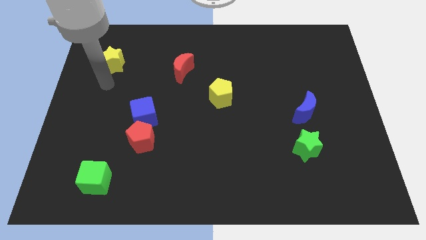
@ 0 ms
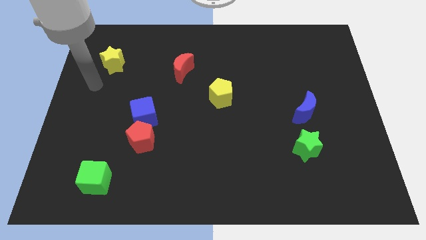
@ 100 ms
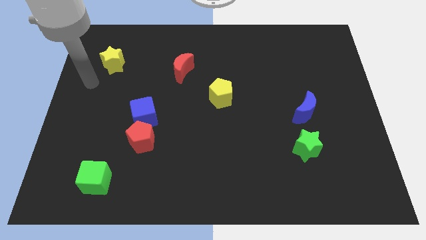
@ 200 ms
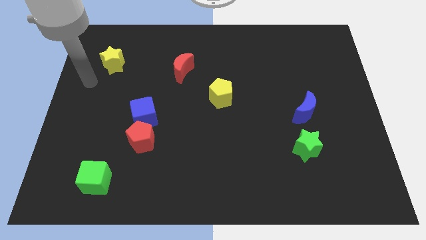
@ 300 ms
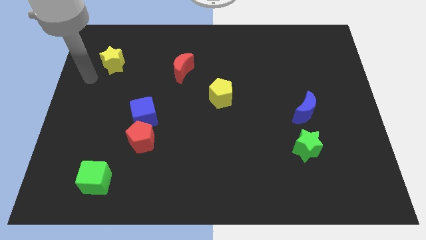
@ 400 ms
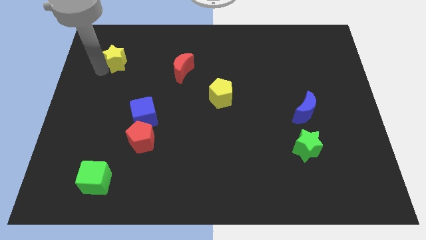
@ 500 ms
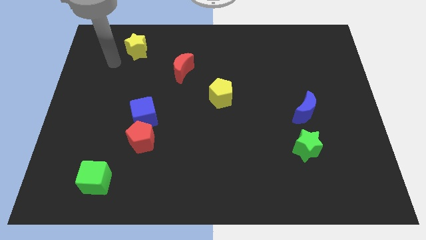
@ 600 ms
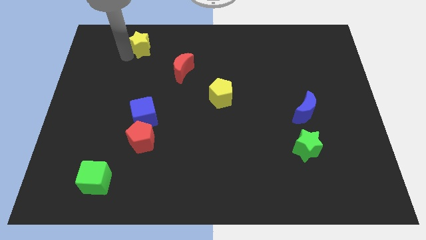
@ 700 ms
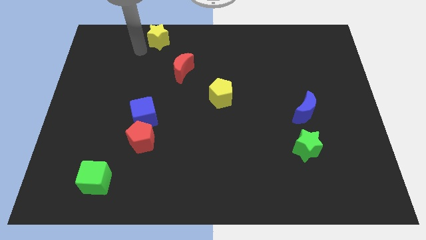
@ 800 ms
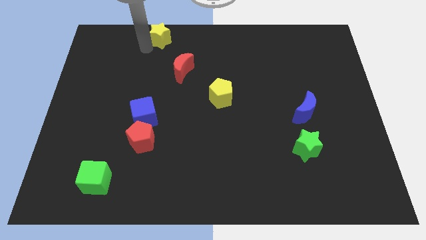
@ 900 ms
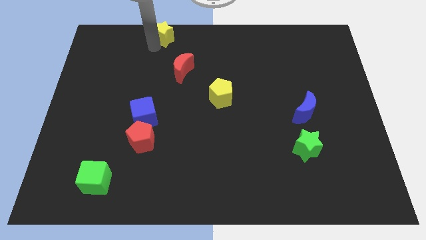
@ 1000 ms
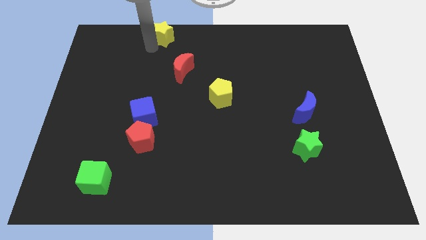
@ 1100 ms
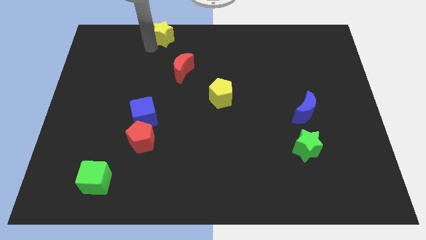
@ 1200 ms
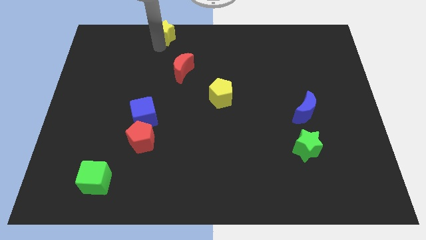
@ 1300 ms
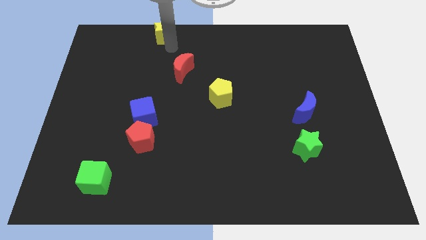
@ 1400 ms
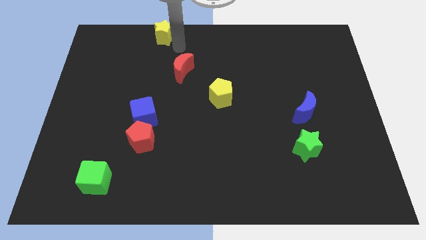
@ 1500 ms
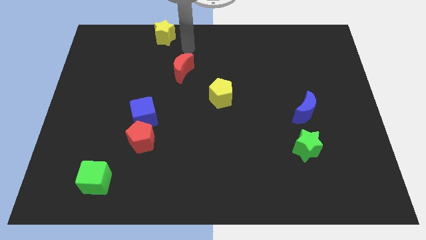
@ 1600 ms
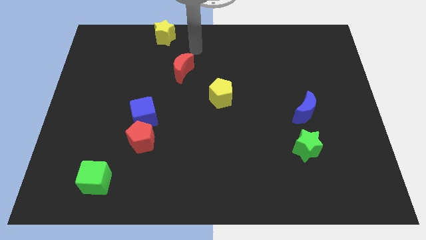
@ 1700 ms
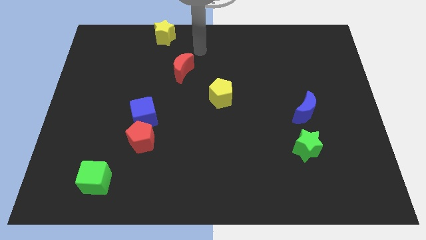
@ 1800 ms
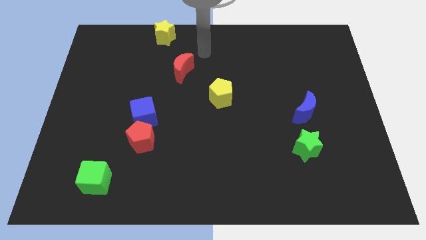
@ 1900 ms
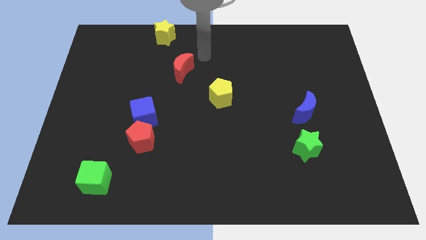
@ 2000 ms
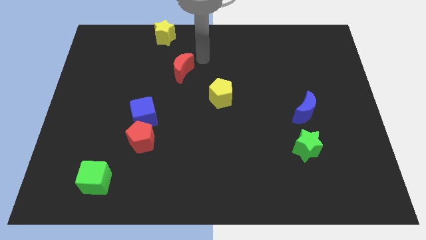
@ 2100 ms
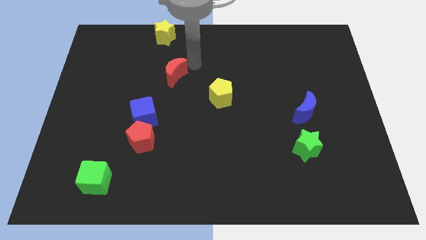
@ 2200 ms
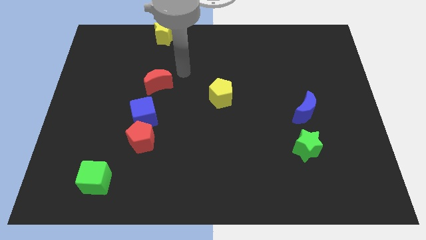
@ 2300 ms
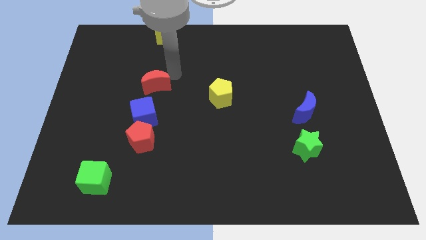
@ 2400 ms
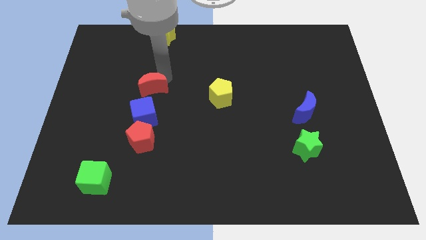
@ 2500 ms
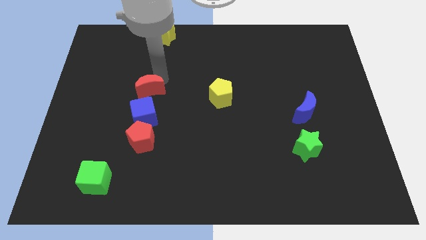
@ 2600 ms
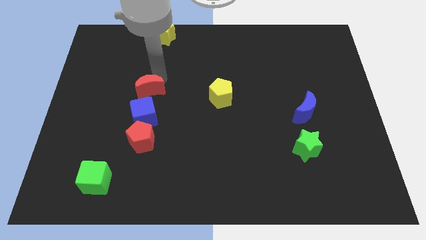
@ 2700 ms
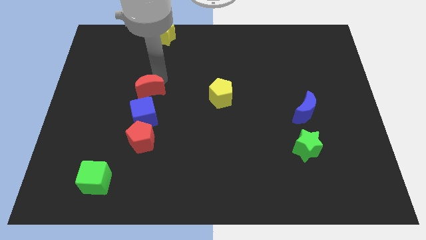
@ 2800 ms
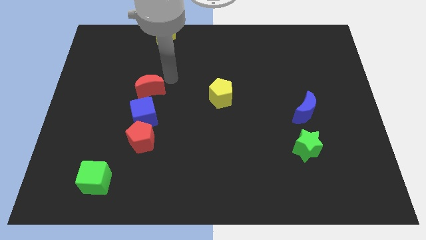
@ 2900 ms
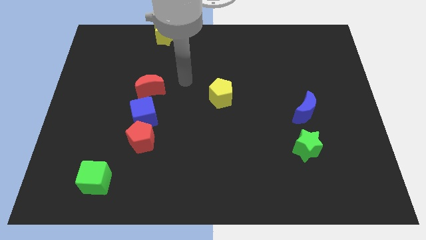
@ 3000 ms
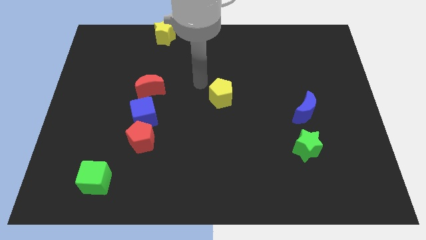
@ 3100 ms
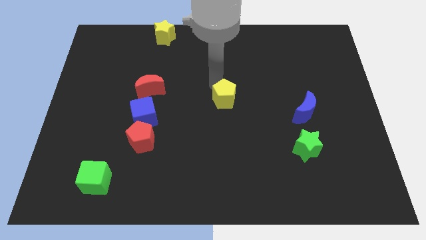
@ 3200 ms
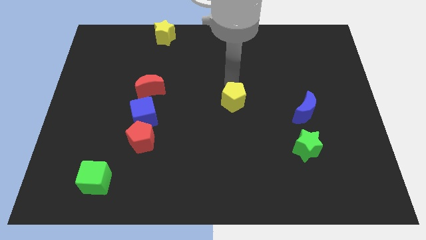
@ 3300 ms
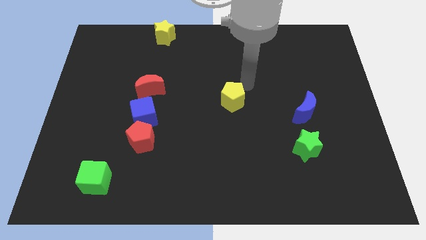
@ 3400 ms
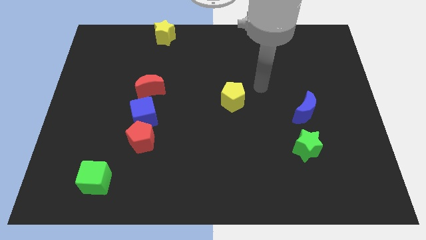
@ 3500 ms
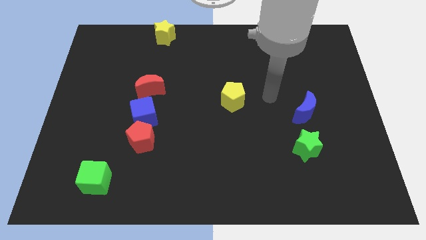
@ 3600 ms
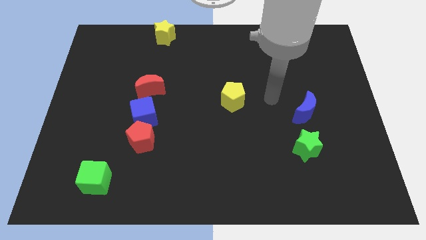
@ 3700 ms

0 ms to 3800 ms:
push the red moon in between the blue cube and the yellow star

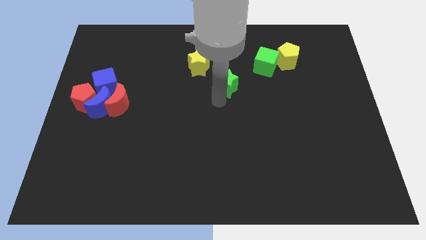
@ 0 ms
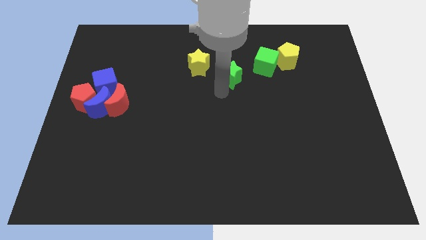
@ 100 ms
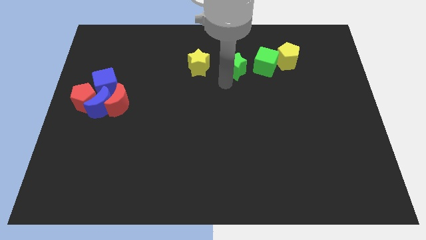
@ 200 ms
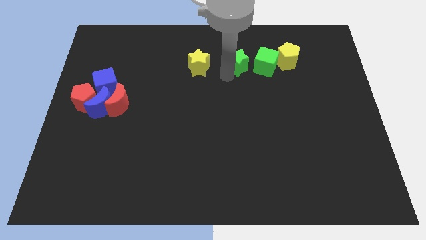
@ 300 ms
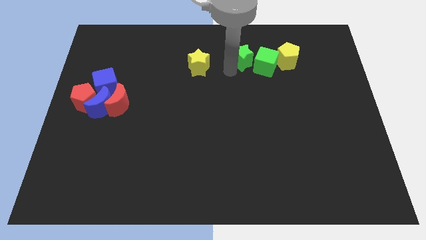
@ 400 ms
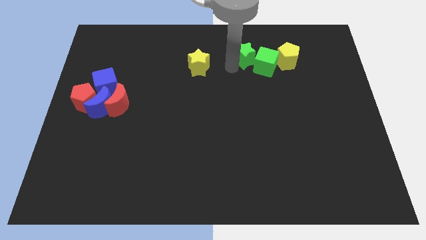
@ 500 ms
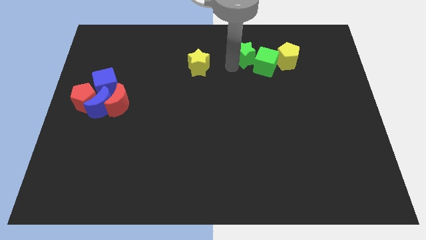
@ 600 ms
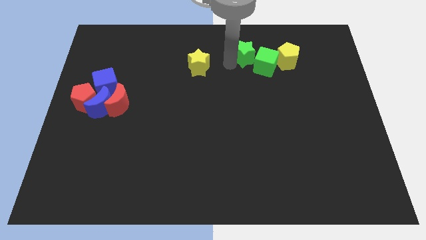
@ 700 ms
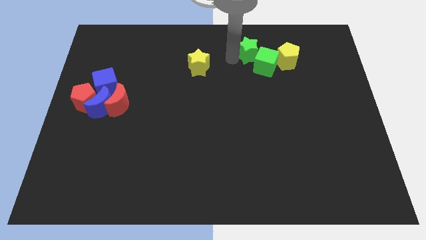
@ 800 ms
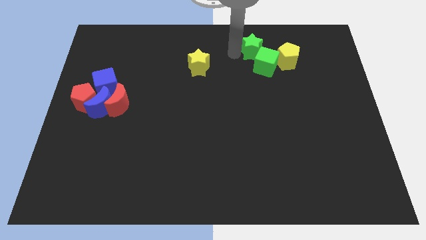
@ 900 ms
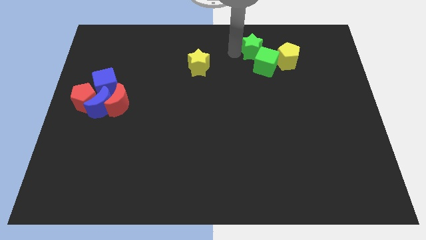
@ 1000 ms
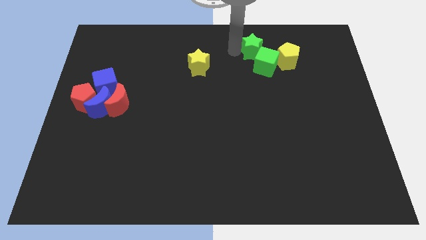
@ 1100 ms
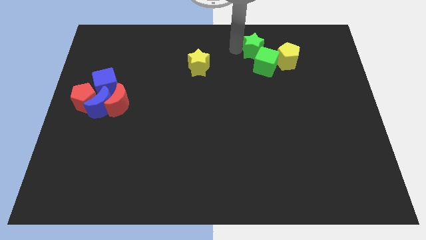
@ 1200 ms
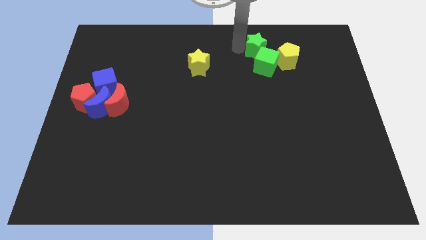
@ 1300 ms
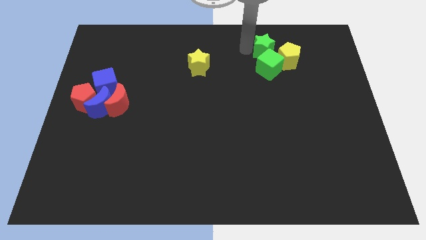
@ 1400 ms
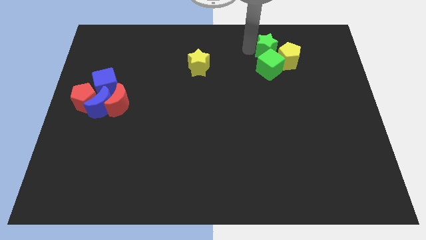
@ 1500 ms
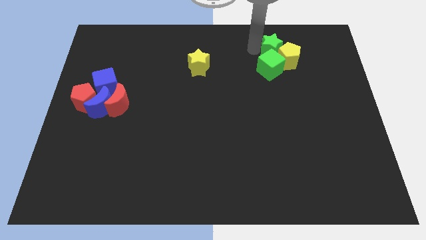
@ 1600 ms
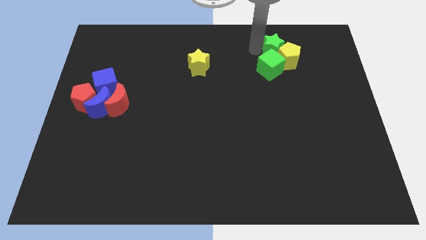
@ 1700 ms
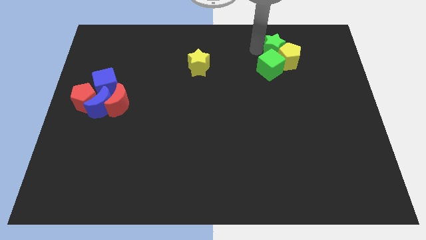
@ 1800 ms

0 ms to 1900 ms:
push the green star to the top of the yellow pentagon

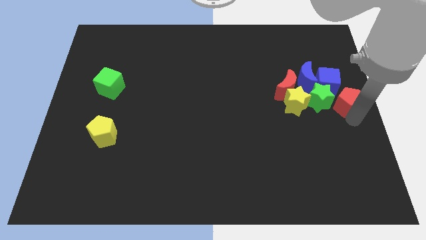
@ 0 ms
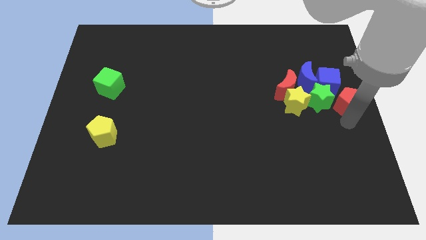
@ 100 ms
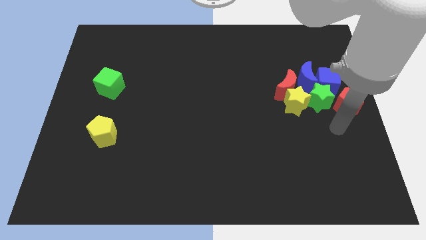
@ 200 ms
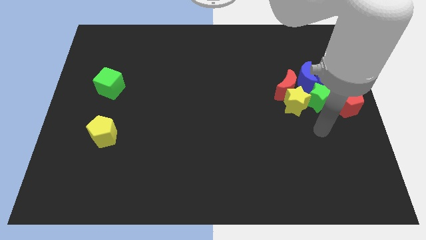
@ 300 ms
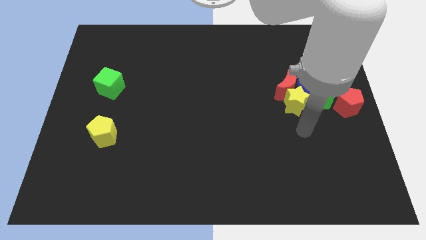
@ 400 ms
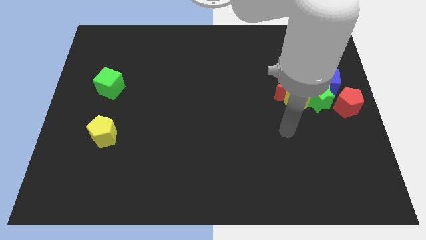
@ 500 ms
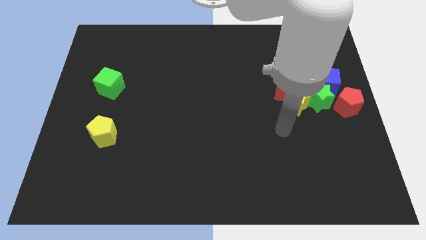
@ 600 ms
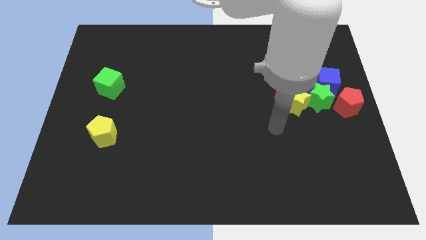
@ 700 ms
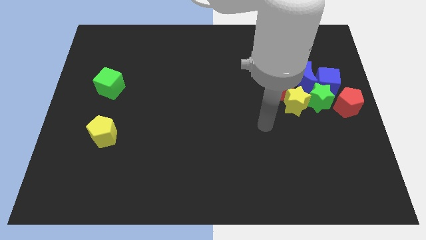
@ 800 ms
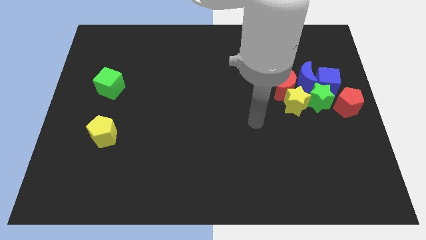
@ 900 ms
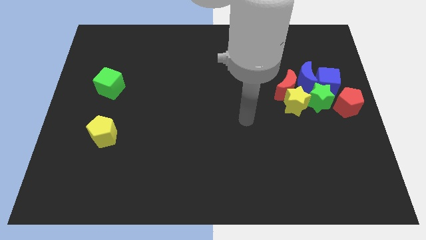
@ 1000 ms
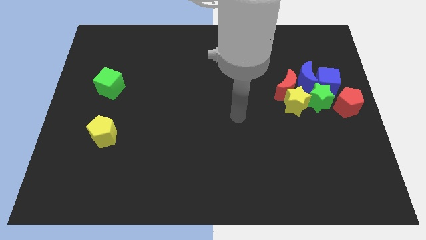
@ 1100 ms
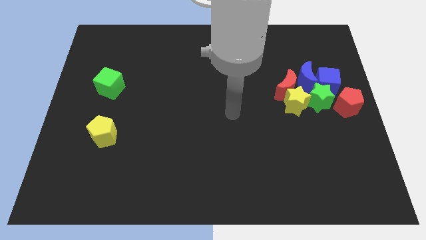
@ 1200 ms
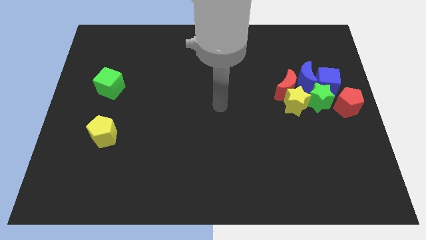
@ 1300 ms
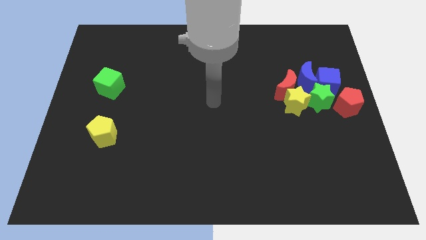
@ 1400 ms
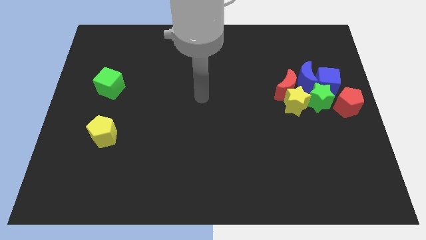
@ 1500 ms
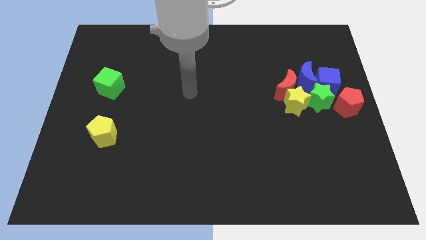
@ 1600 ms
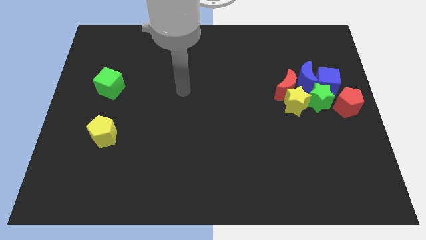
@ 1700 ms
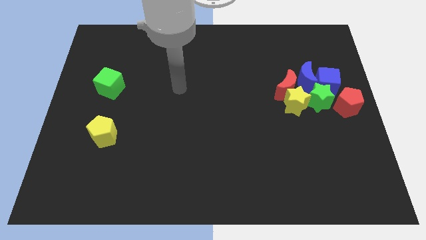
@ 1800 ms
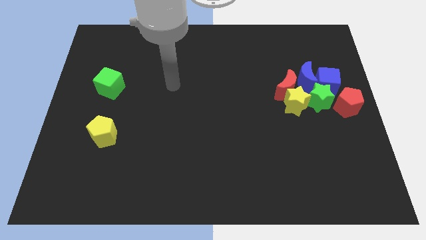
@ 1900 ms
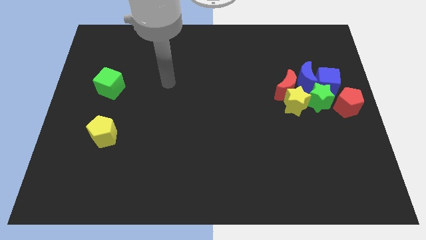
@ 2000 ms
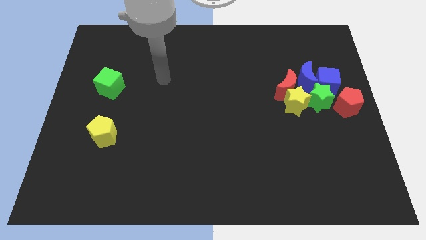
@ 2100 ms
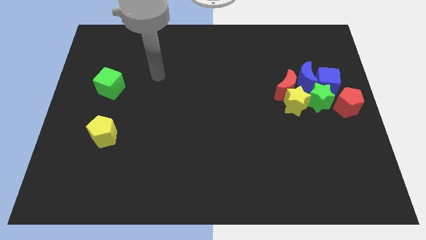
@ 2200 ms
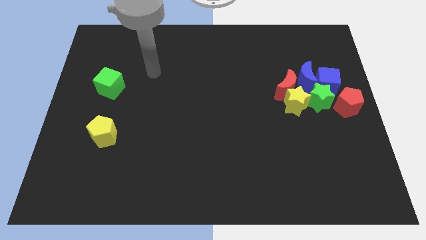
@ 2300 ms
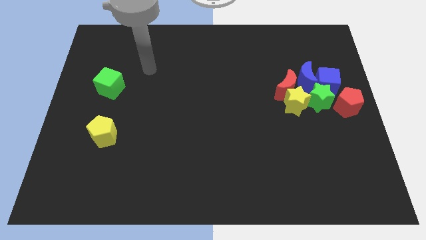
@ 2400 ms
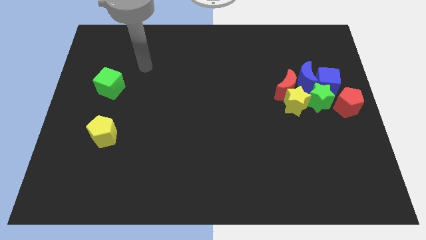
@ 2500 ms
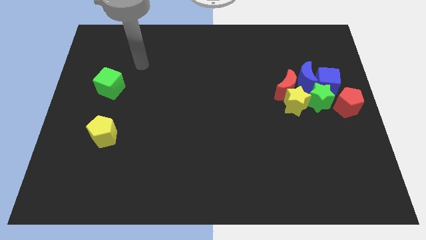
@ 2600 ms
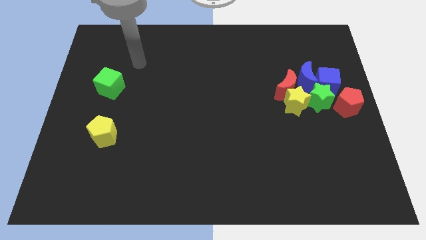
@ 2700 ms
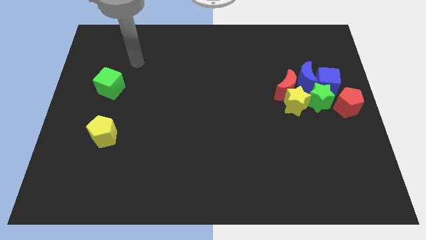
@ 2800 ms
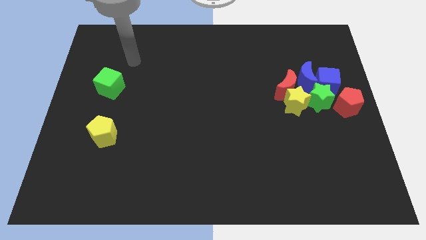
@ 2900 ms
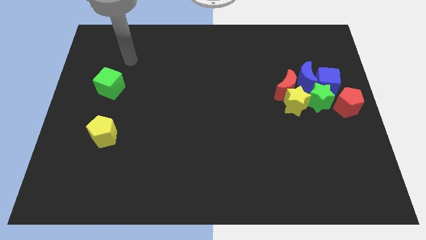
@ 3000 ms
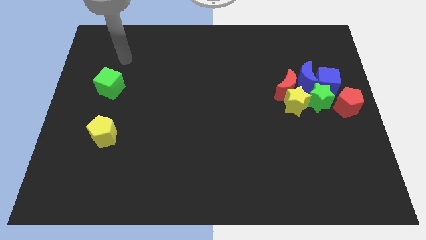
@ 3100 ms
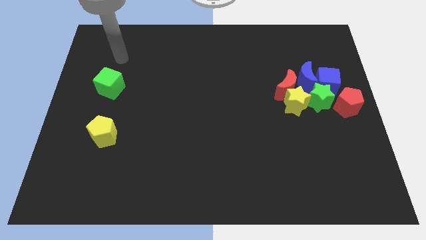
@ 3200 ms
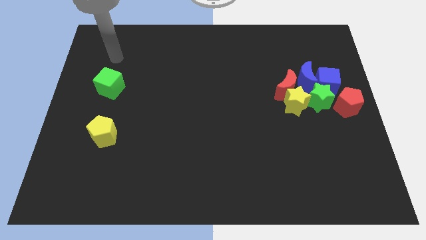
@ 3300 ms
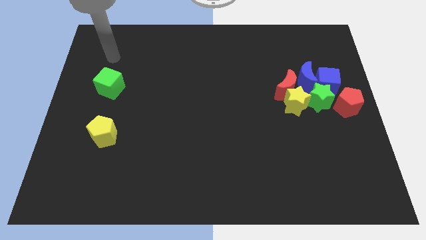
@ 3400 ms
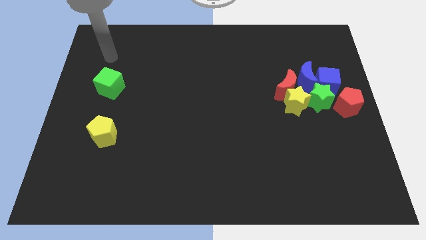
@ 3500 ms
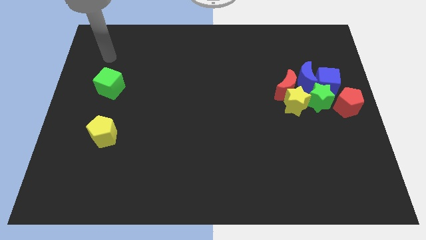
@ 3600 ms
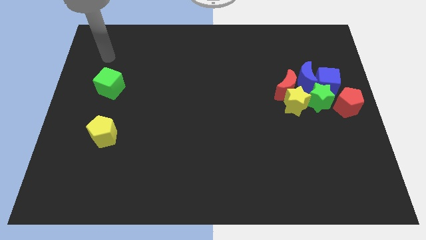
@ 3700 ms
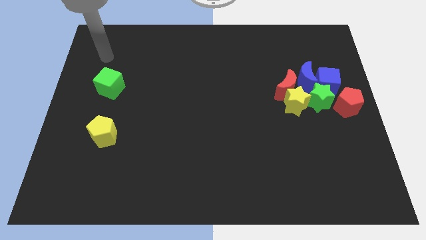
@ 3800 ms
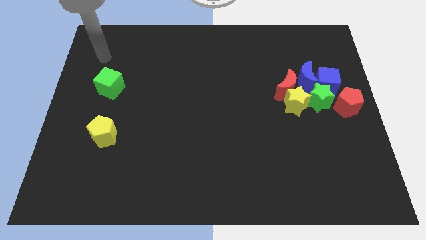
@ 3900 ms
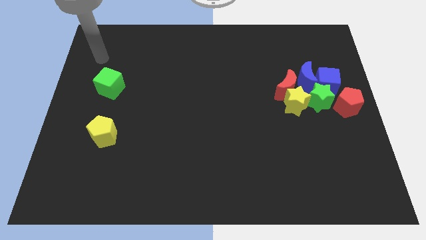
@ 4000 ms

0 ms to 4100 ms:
move away from the red pentagon
